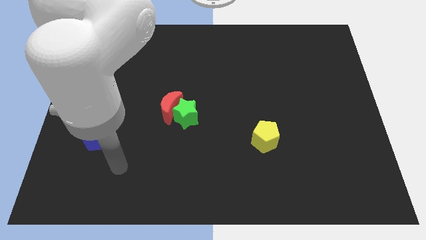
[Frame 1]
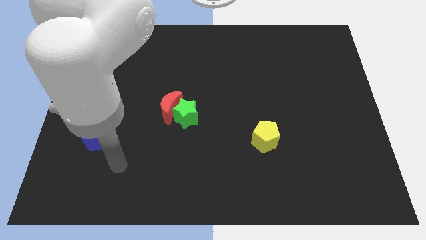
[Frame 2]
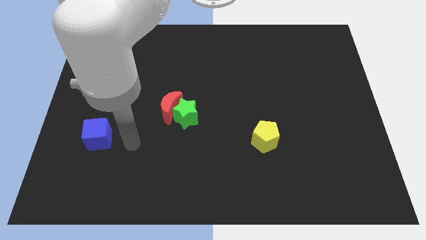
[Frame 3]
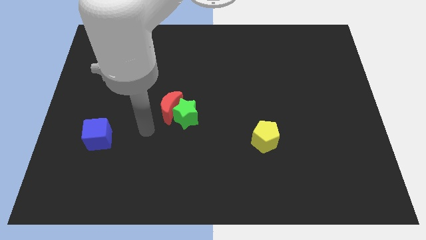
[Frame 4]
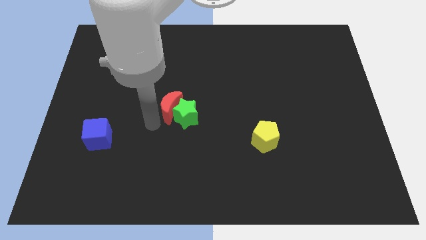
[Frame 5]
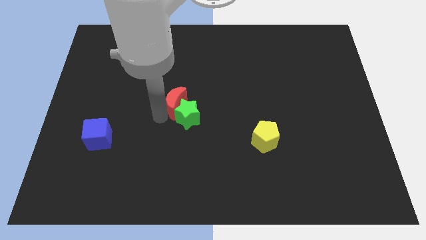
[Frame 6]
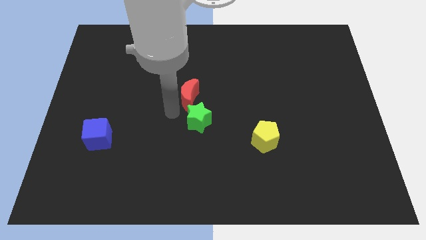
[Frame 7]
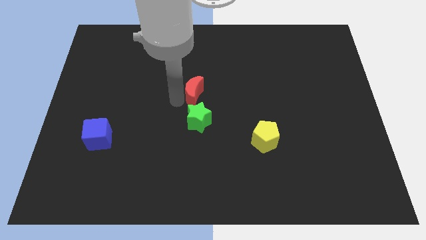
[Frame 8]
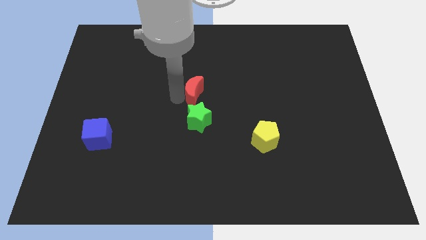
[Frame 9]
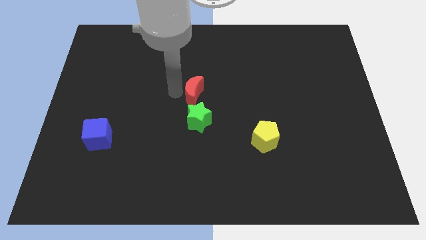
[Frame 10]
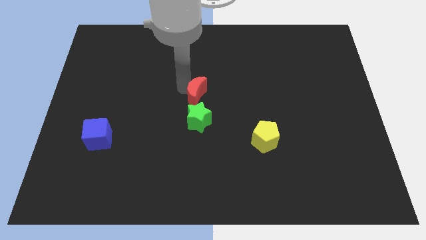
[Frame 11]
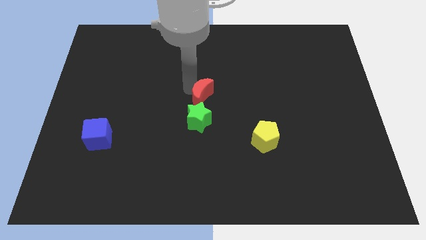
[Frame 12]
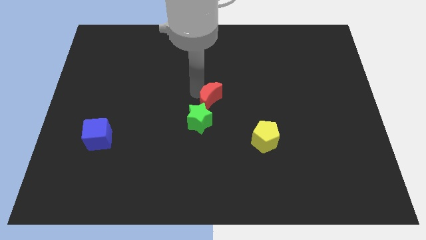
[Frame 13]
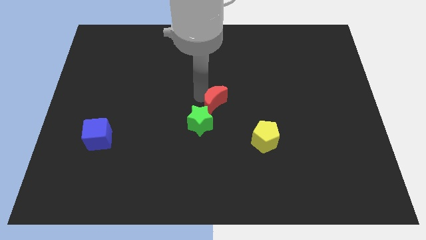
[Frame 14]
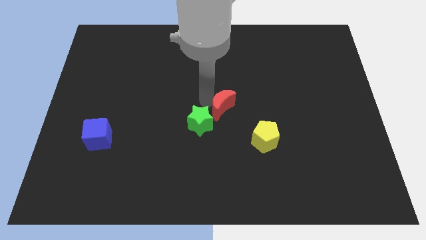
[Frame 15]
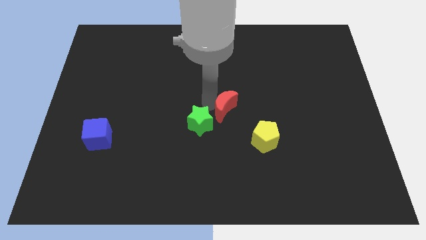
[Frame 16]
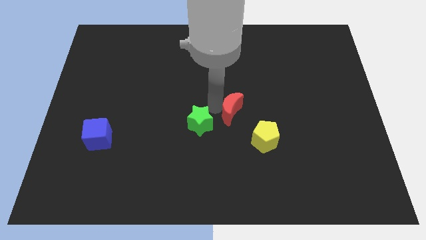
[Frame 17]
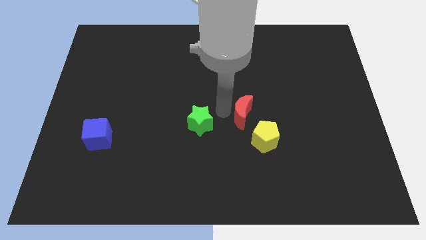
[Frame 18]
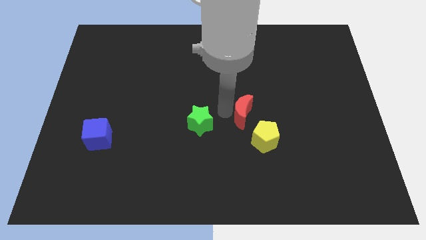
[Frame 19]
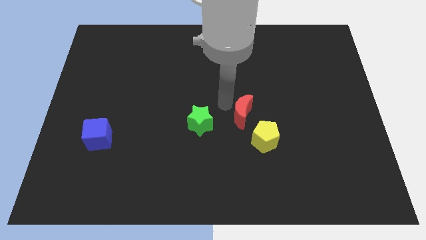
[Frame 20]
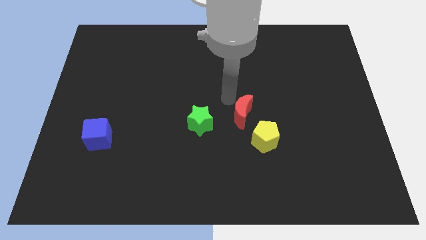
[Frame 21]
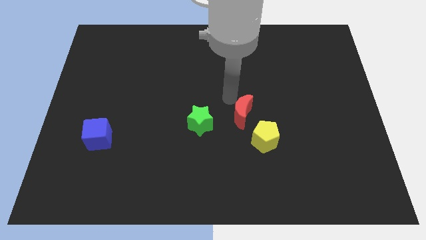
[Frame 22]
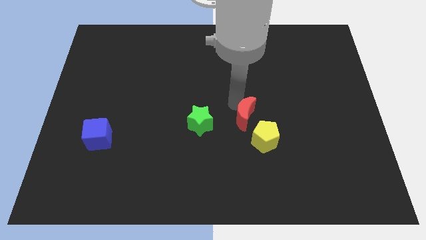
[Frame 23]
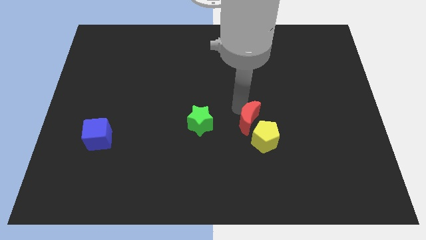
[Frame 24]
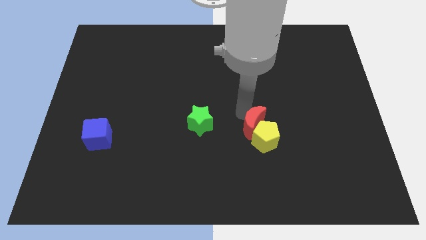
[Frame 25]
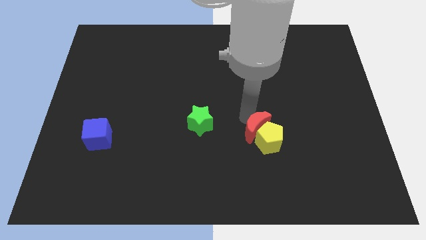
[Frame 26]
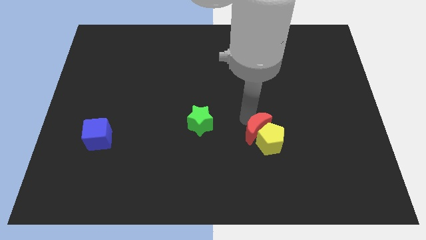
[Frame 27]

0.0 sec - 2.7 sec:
move the red moon to the yellow pentagon

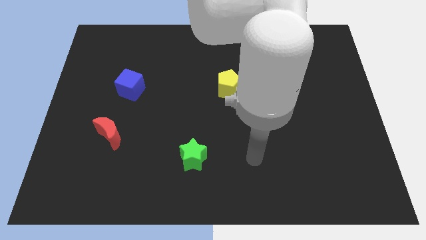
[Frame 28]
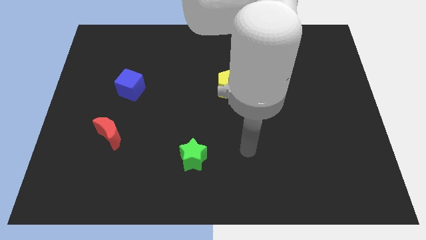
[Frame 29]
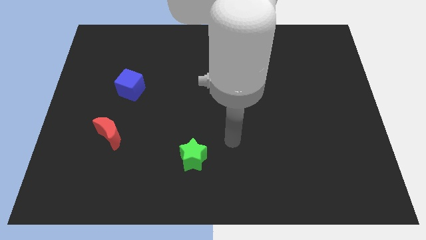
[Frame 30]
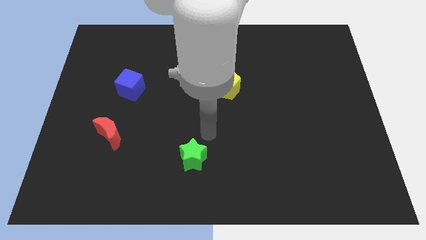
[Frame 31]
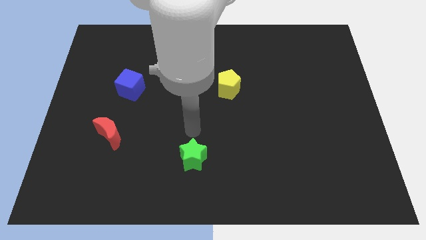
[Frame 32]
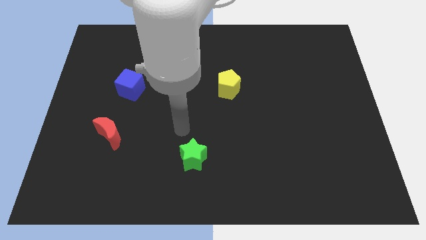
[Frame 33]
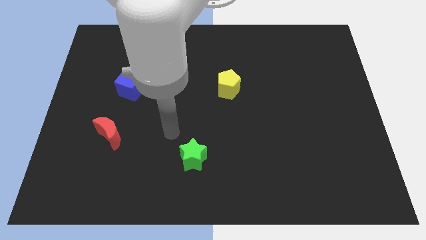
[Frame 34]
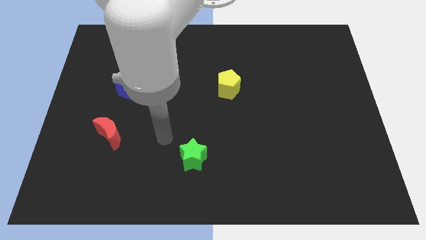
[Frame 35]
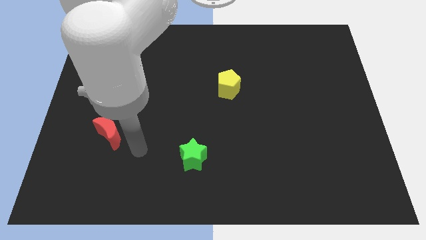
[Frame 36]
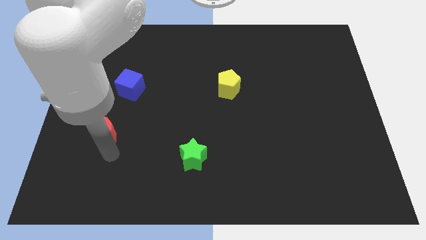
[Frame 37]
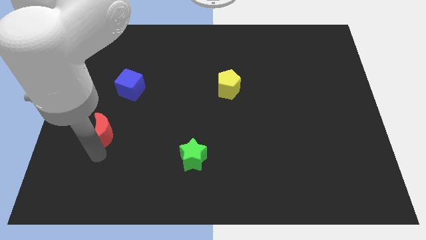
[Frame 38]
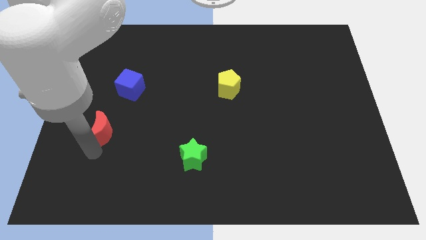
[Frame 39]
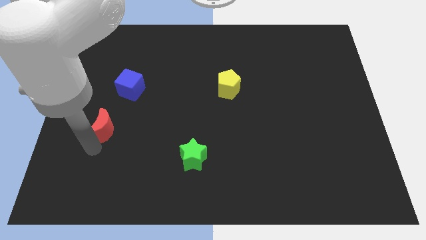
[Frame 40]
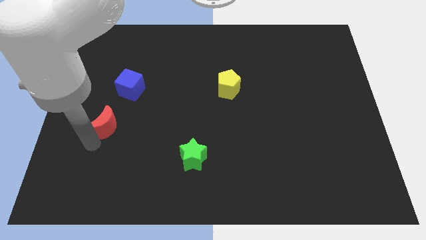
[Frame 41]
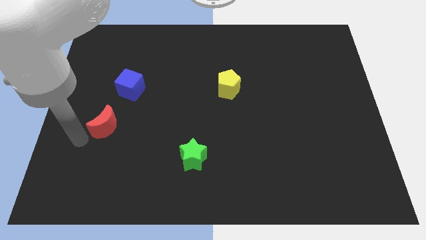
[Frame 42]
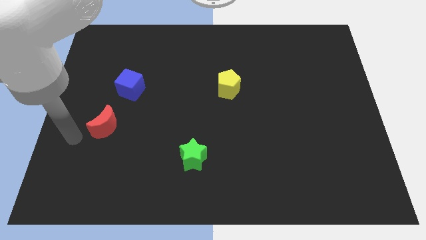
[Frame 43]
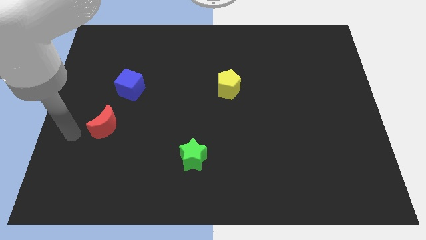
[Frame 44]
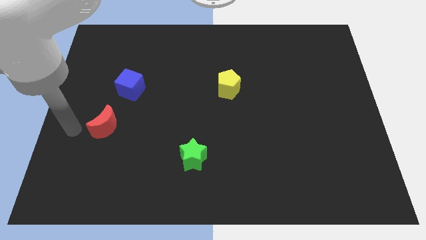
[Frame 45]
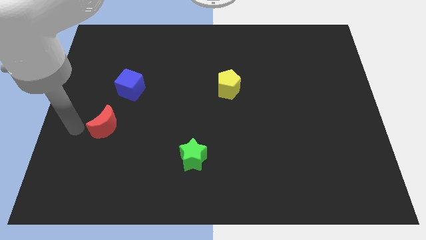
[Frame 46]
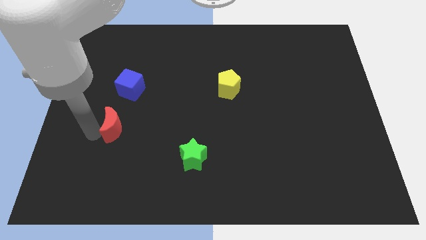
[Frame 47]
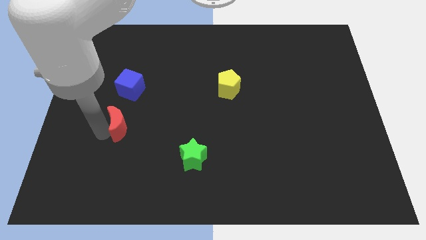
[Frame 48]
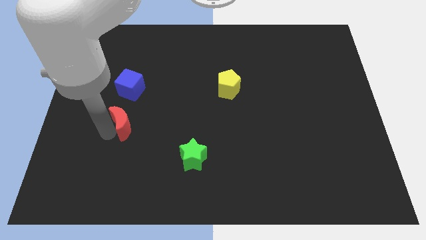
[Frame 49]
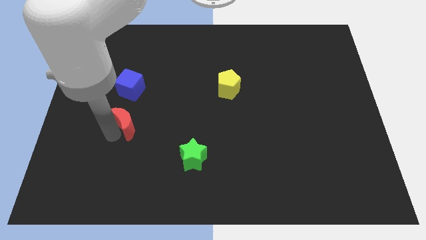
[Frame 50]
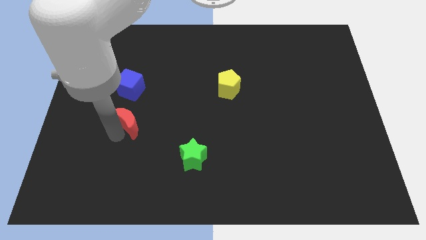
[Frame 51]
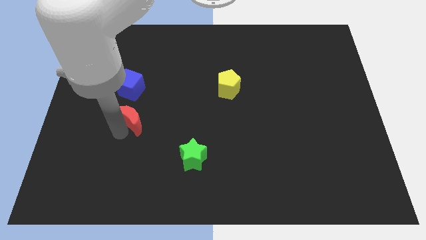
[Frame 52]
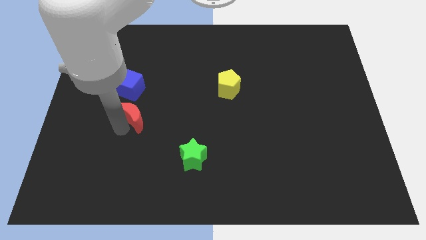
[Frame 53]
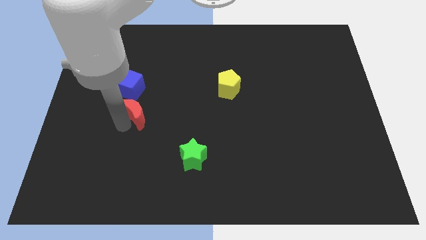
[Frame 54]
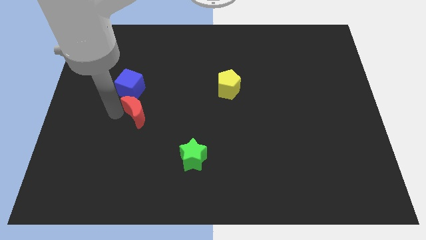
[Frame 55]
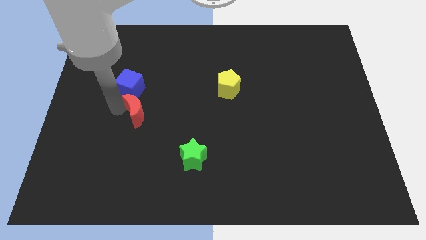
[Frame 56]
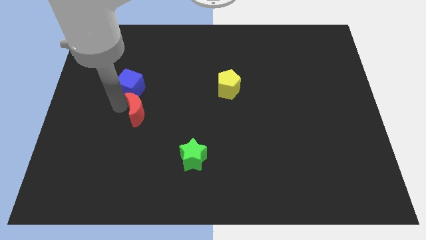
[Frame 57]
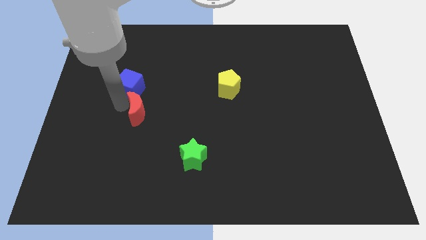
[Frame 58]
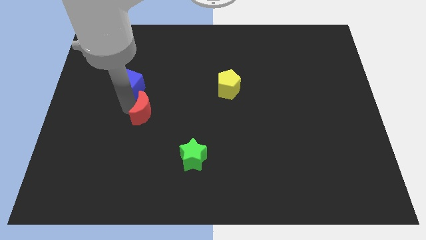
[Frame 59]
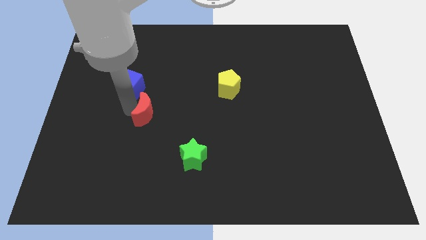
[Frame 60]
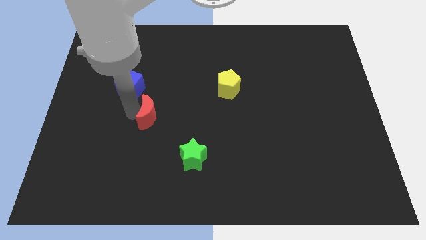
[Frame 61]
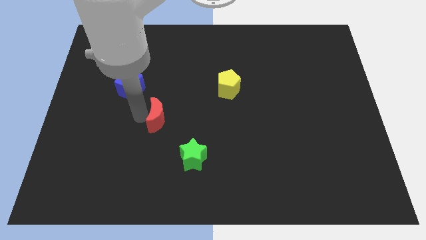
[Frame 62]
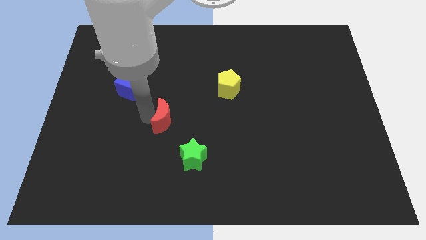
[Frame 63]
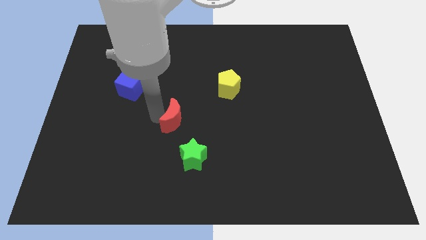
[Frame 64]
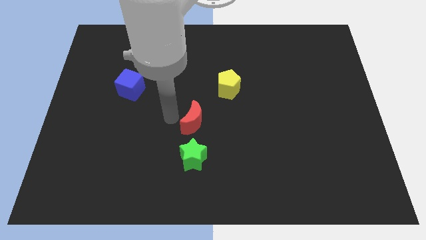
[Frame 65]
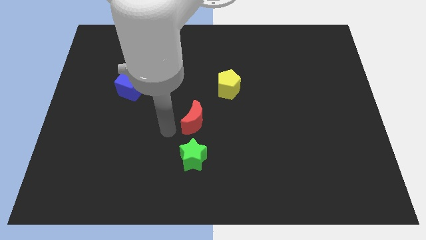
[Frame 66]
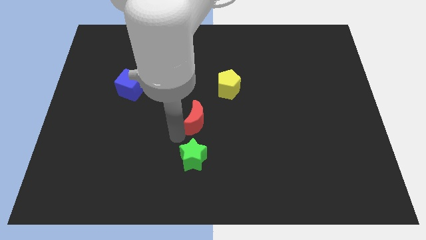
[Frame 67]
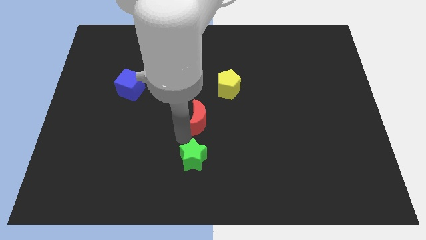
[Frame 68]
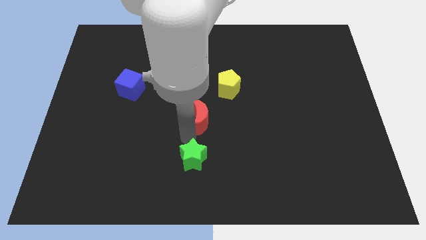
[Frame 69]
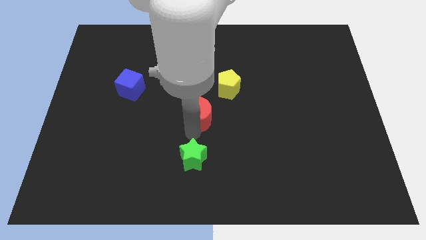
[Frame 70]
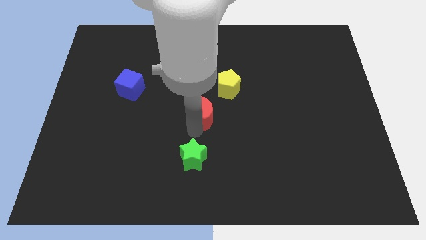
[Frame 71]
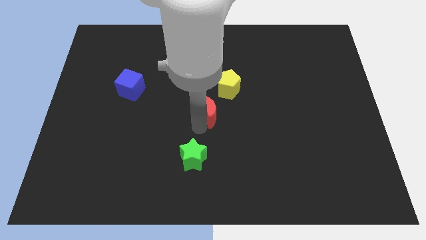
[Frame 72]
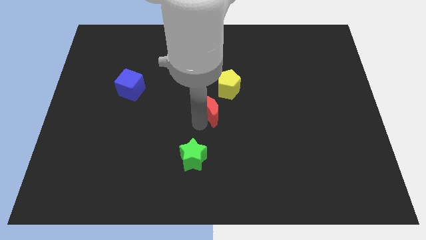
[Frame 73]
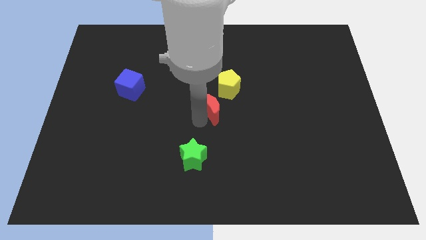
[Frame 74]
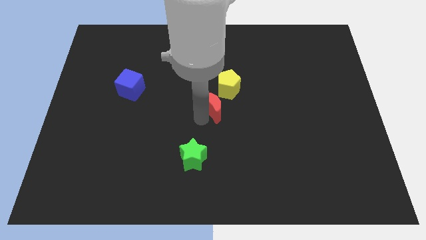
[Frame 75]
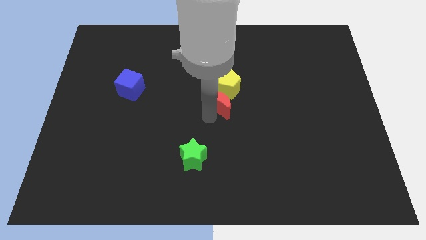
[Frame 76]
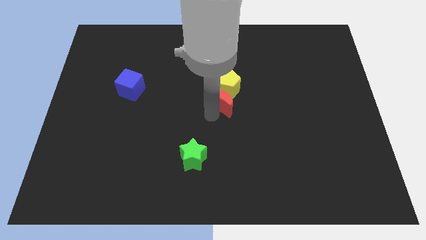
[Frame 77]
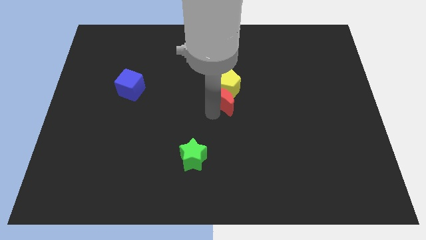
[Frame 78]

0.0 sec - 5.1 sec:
push the red block close to the pentagon

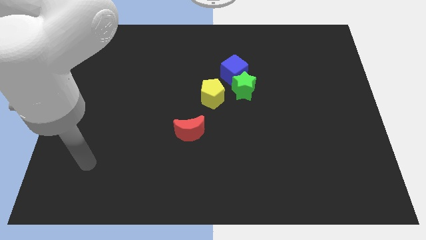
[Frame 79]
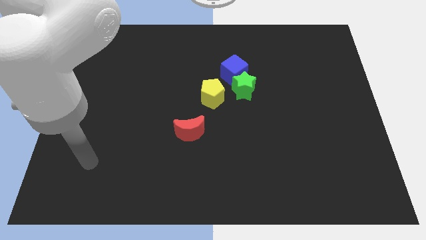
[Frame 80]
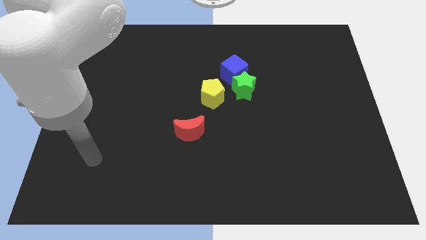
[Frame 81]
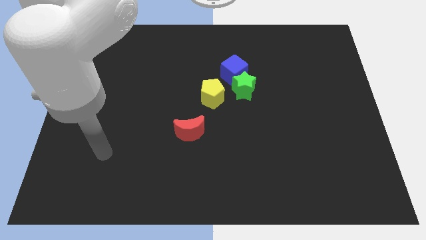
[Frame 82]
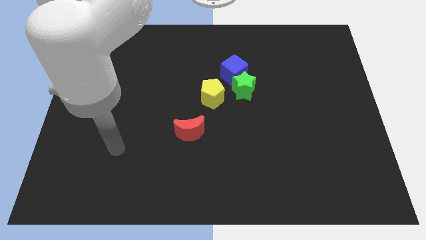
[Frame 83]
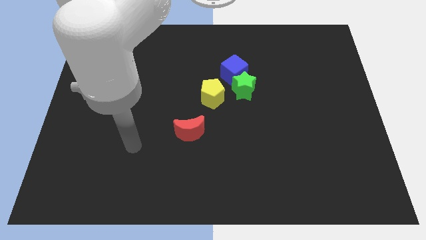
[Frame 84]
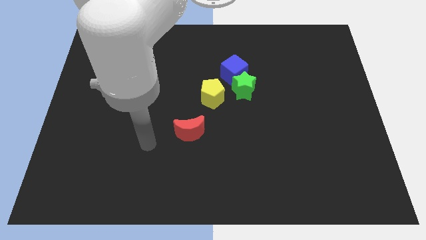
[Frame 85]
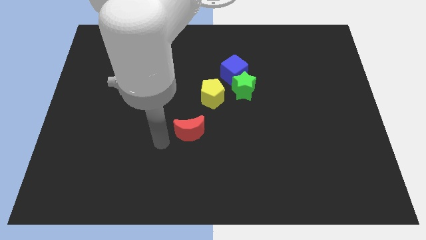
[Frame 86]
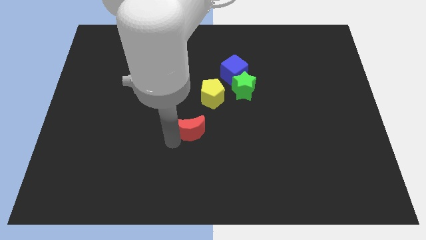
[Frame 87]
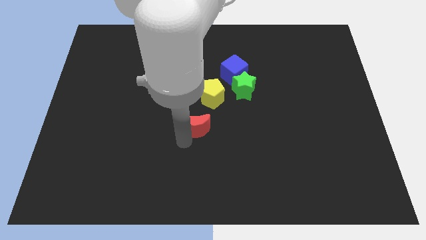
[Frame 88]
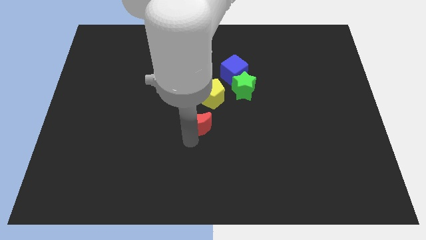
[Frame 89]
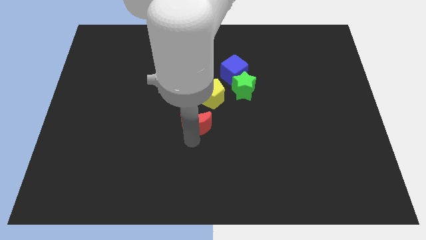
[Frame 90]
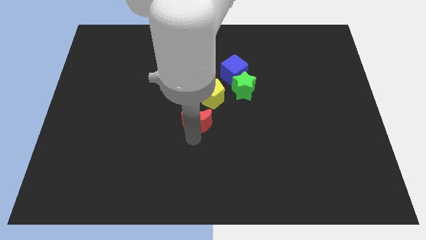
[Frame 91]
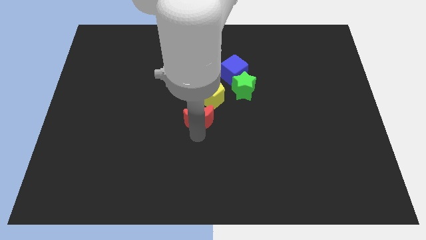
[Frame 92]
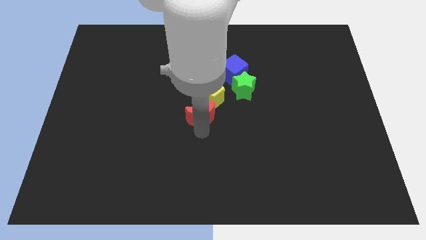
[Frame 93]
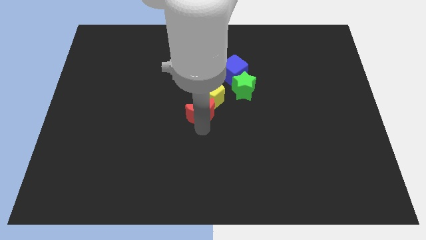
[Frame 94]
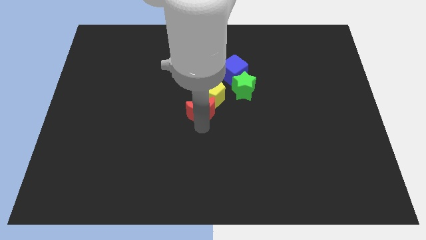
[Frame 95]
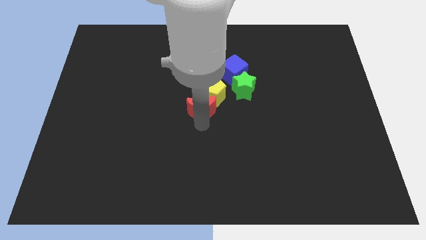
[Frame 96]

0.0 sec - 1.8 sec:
move the moon close to the pentagon
